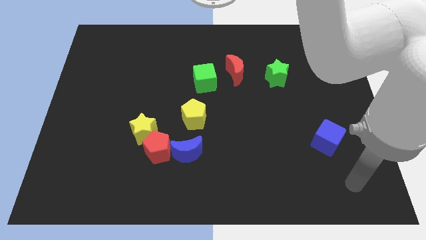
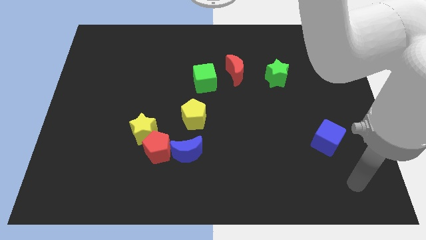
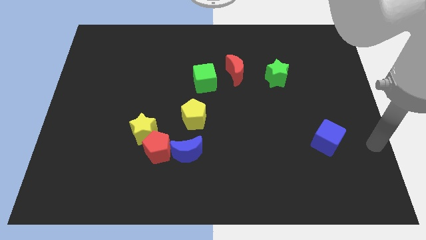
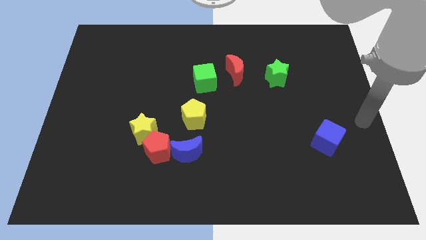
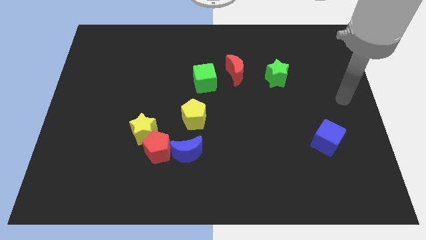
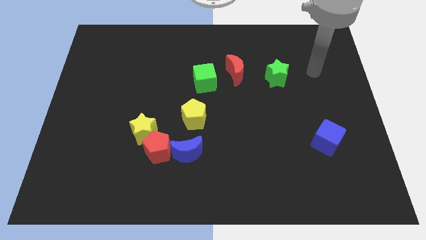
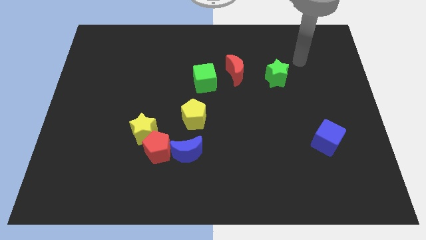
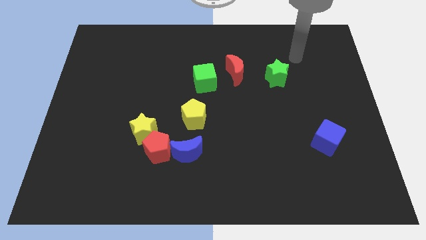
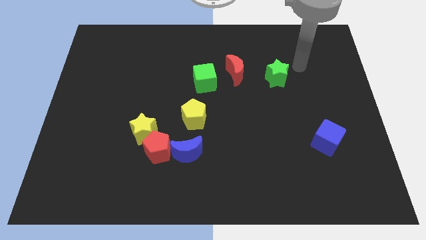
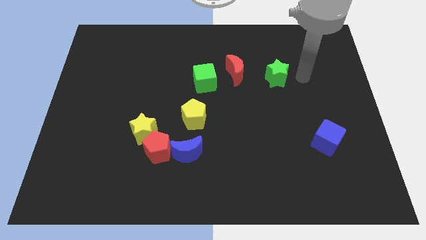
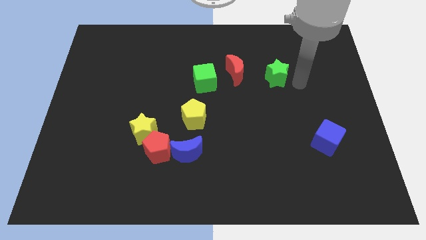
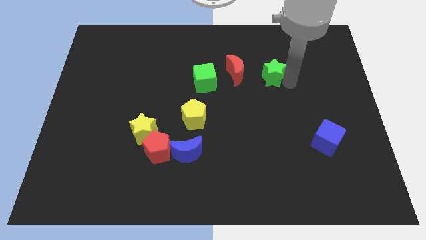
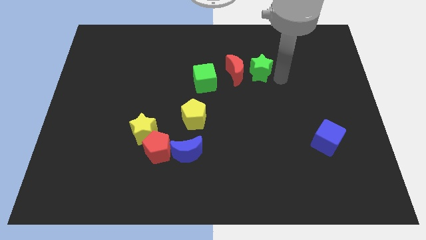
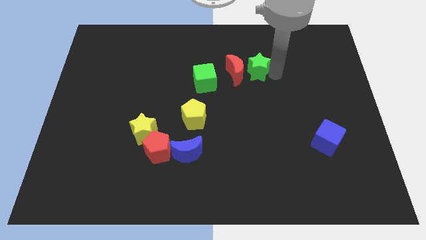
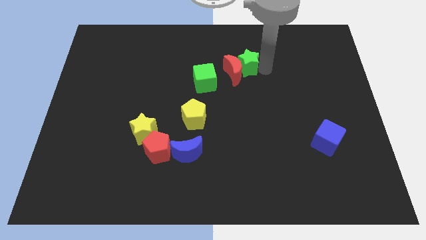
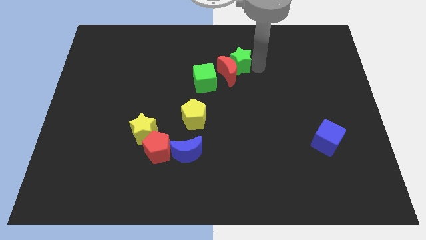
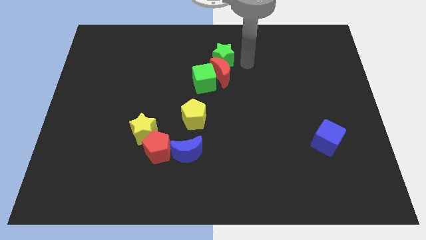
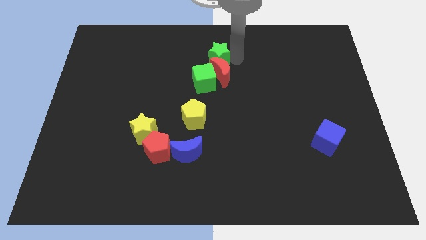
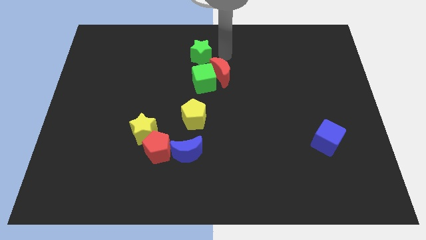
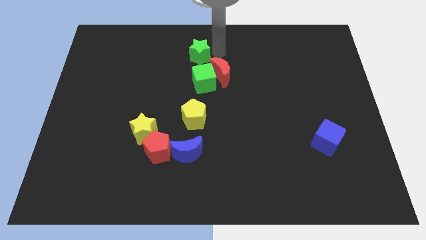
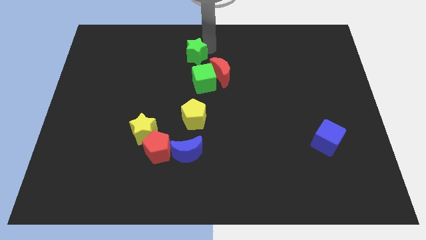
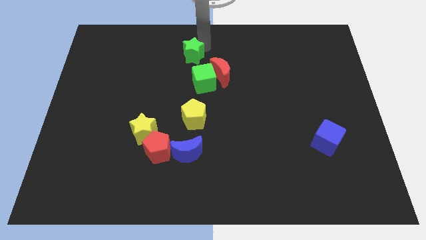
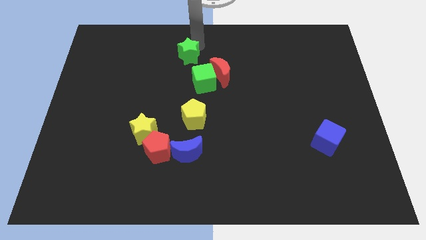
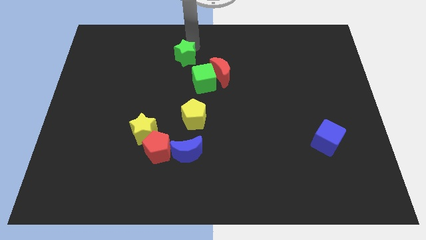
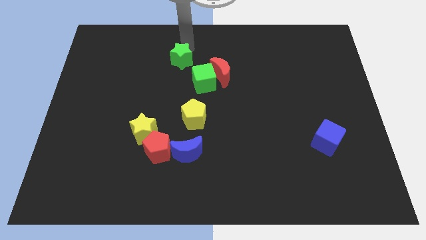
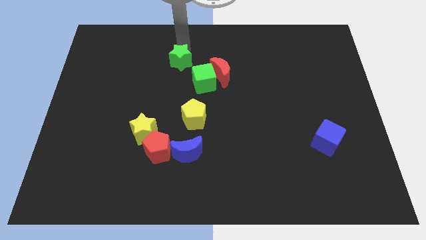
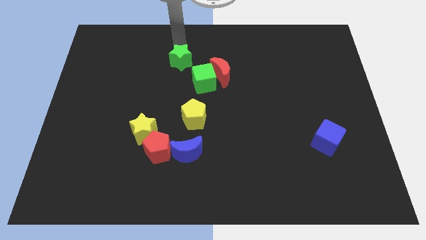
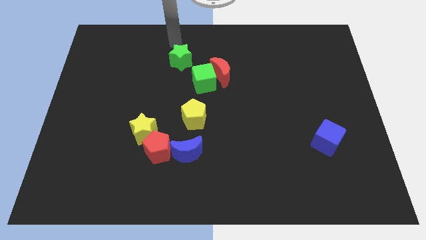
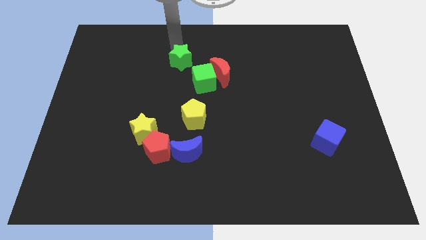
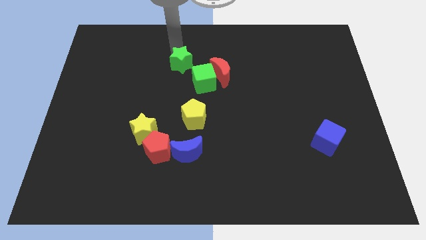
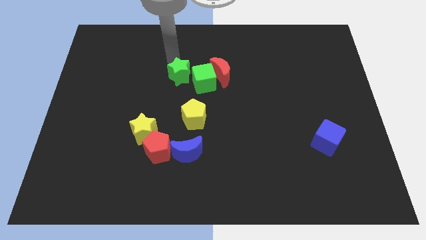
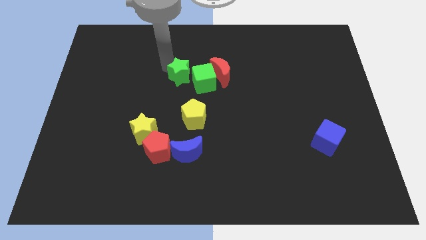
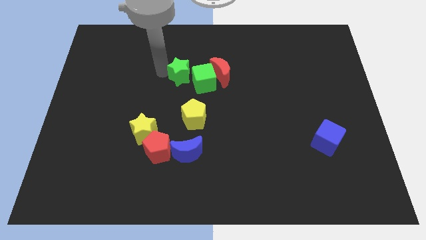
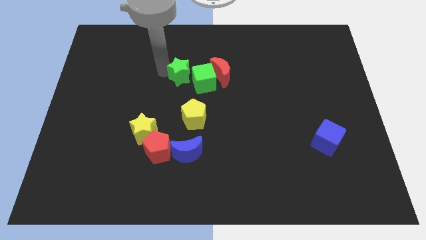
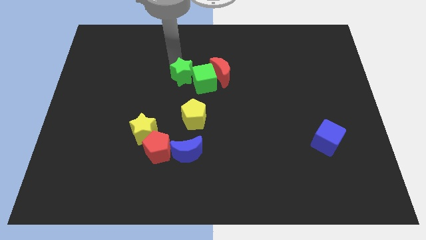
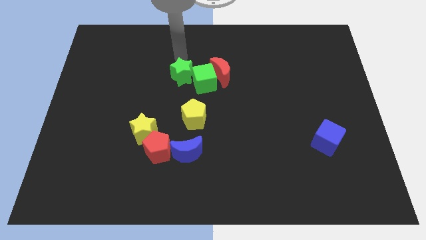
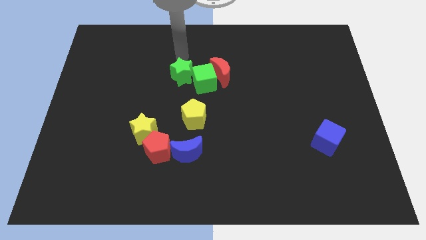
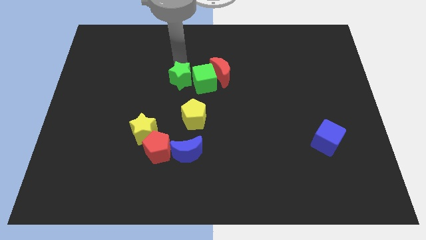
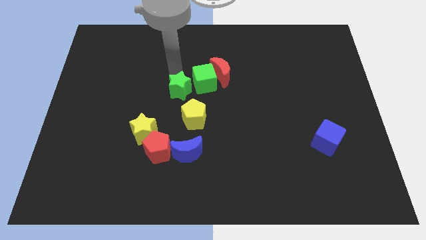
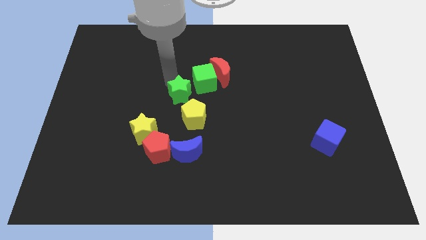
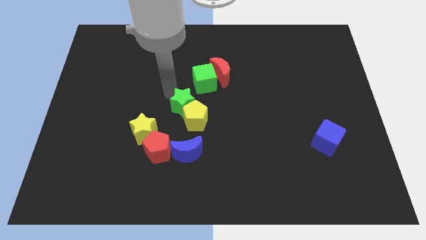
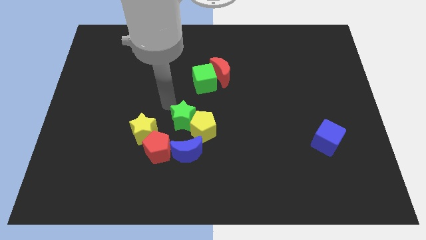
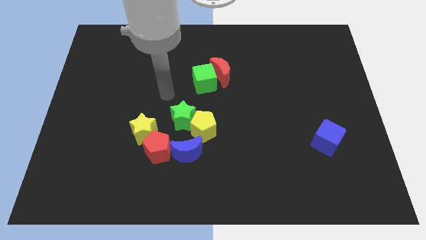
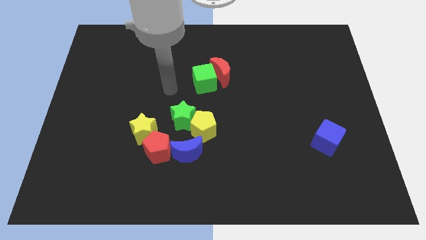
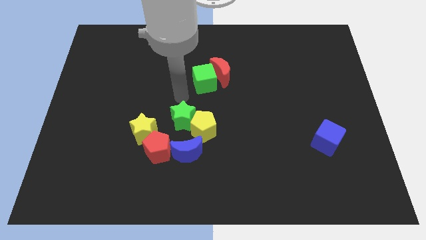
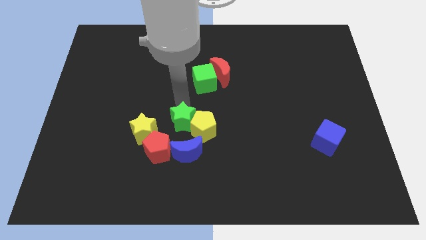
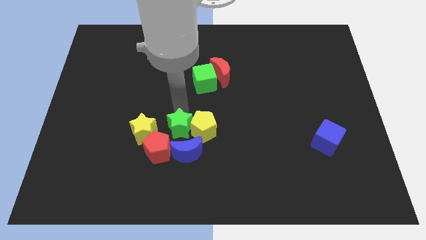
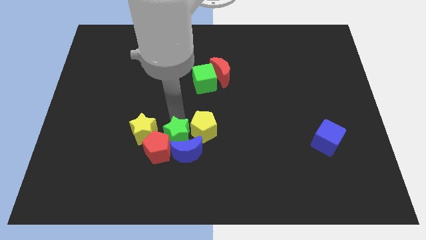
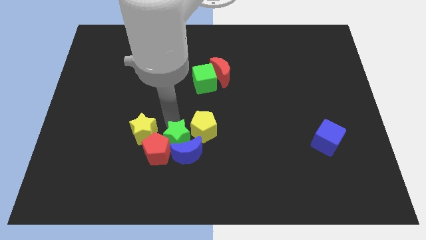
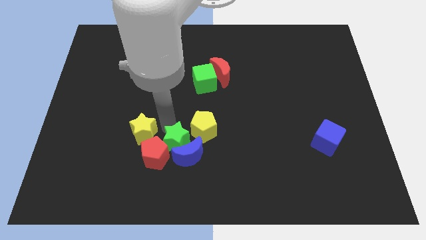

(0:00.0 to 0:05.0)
move the green star to the red pentagon

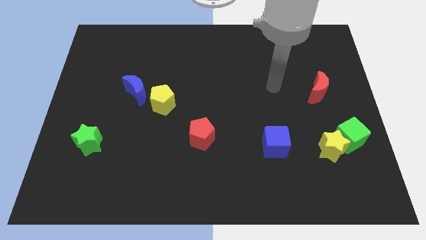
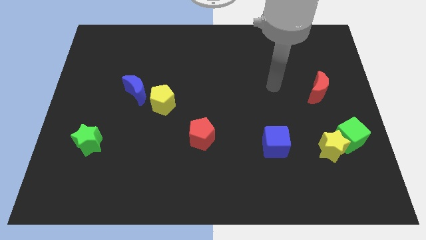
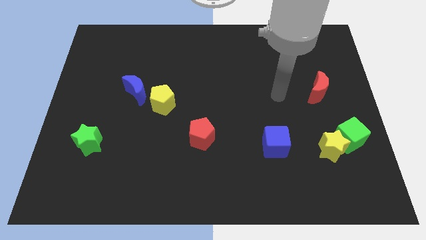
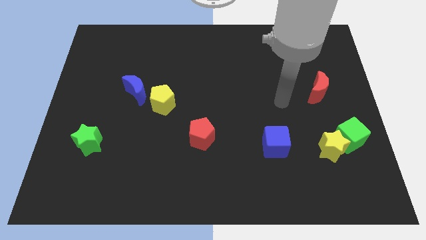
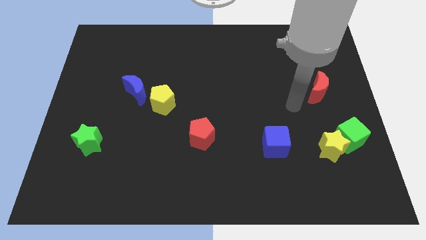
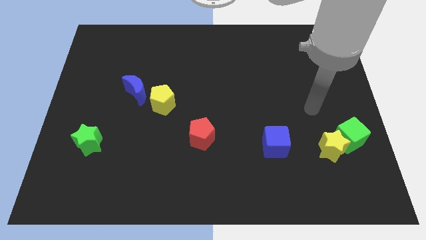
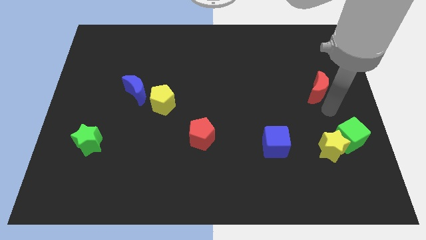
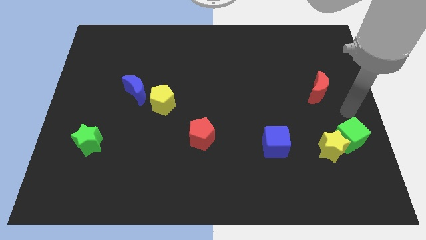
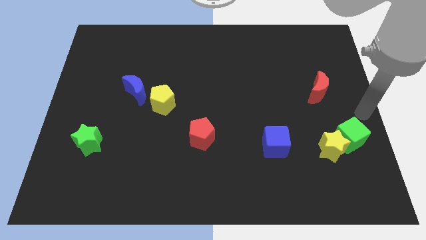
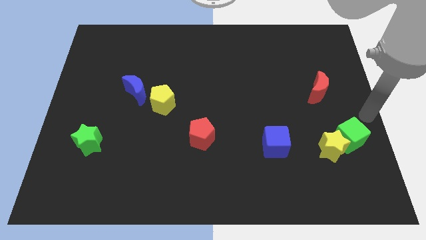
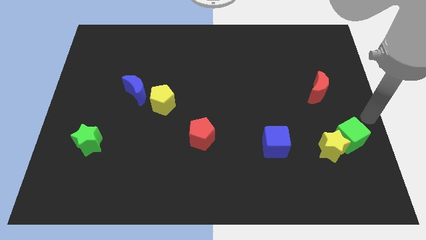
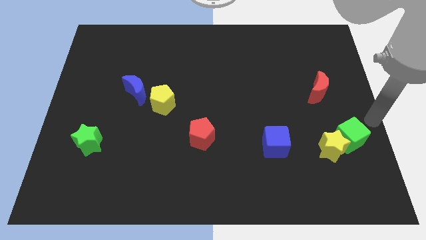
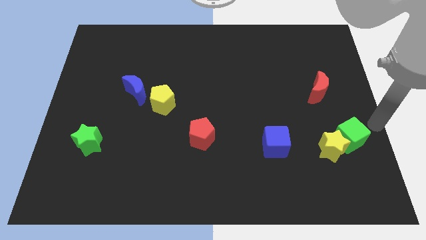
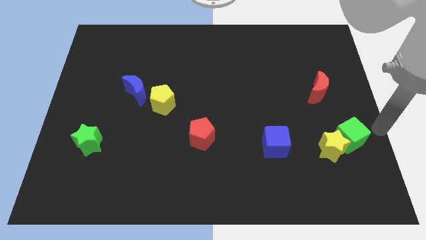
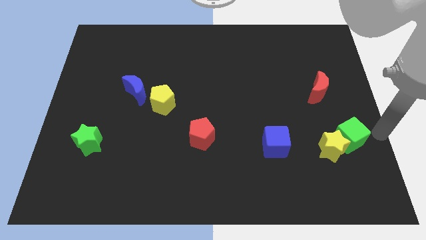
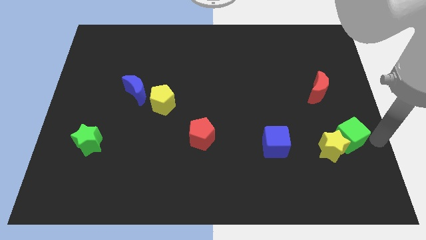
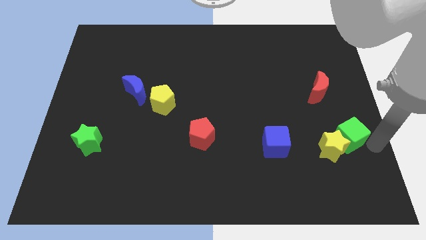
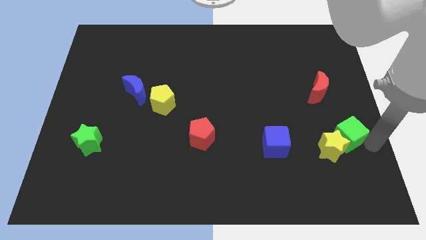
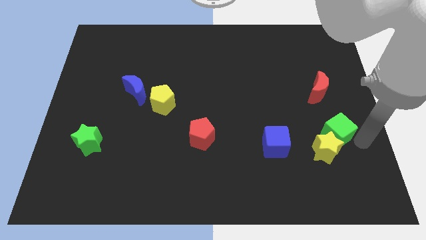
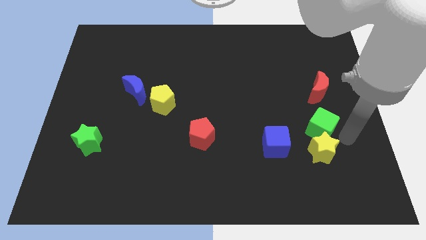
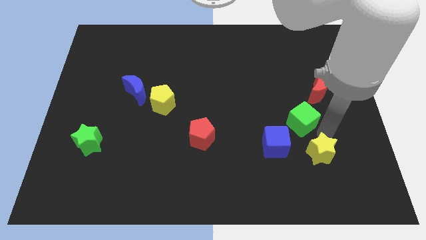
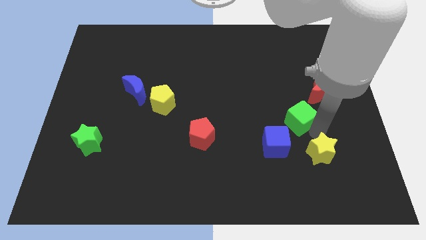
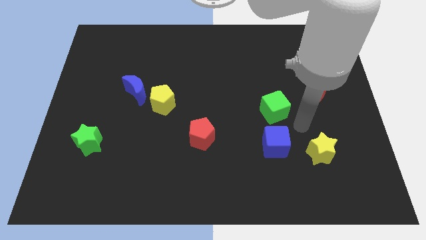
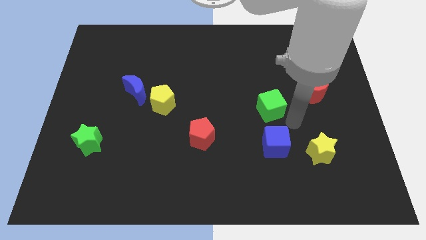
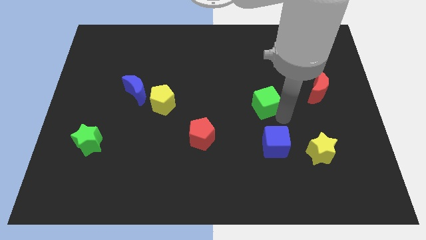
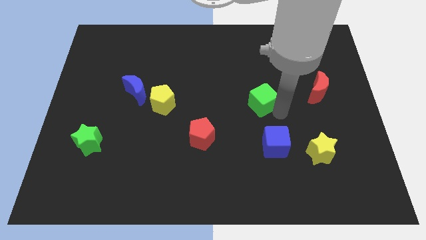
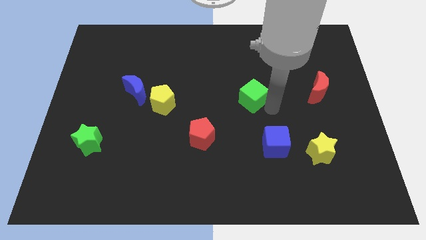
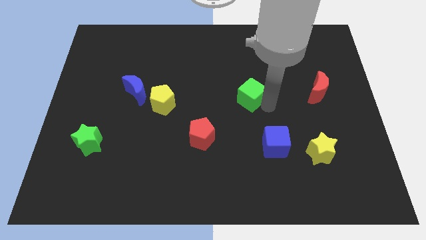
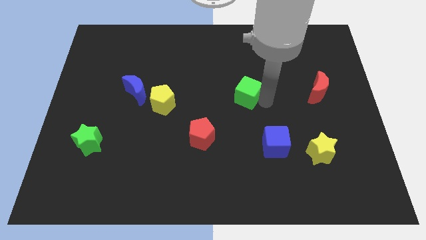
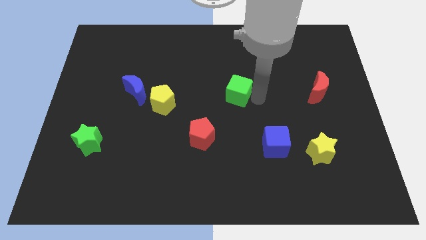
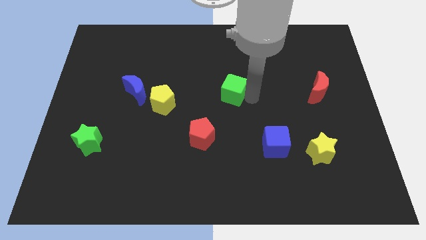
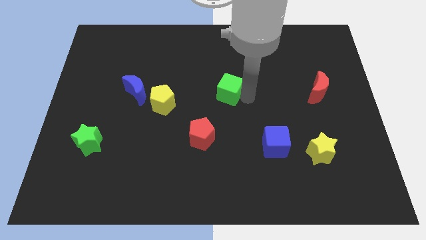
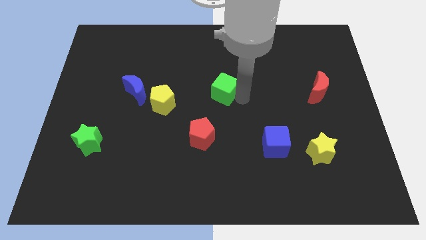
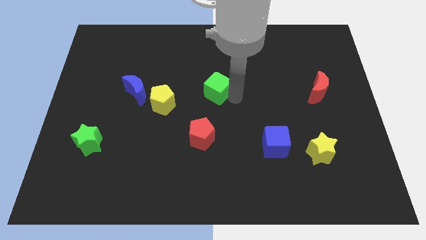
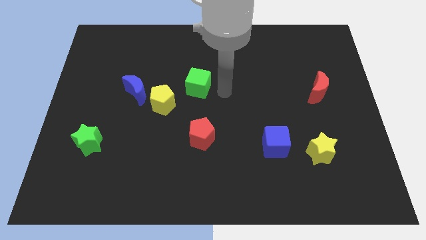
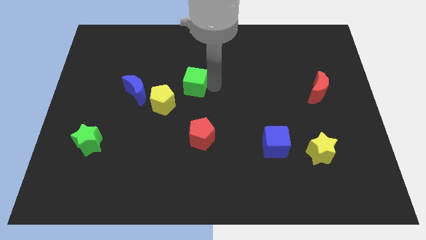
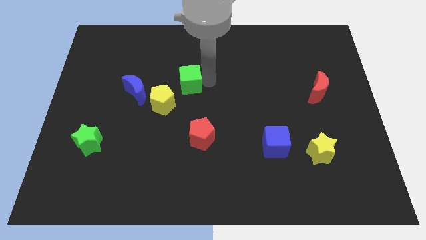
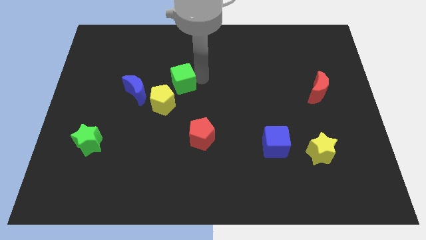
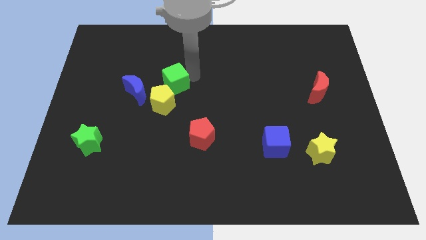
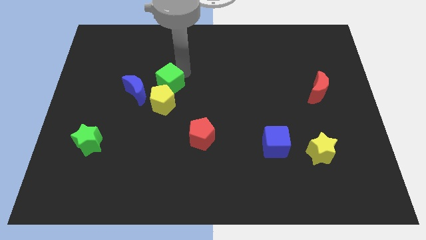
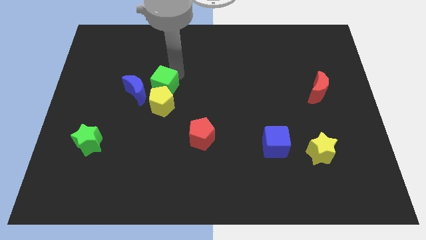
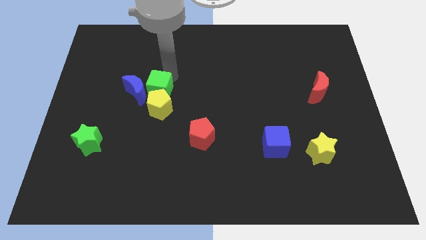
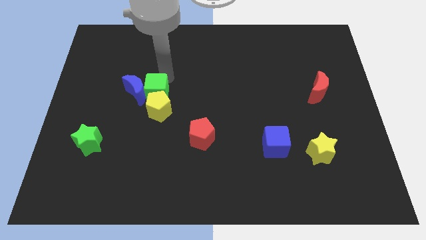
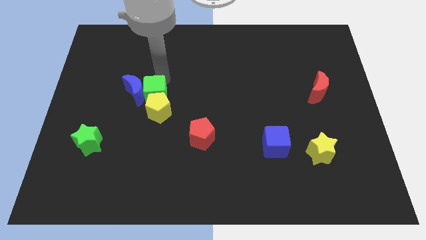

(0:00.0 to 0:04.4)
push the green cube close to the blue moon
